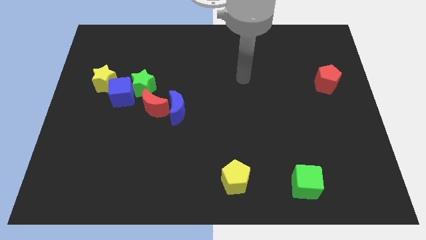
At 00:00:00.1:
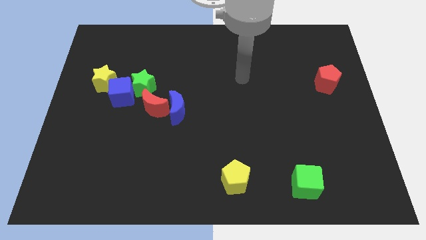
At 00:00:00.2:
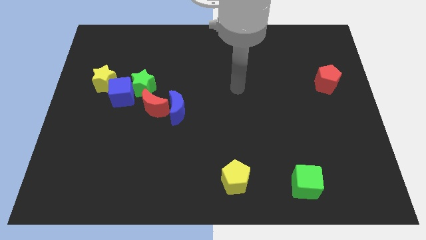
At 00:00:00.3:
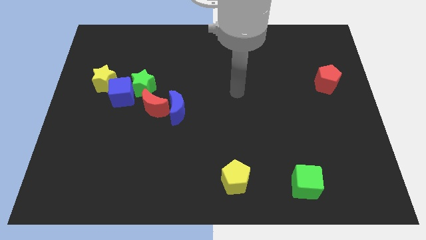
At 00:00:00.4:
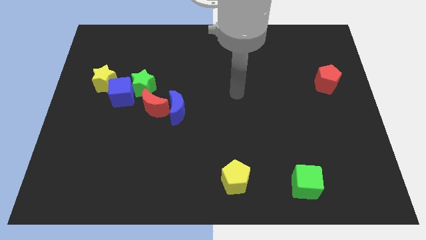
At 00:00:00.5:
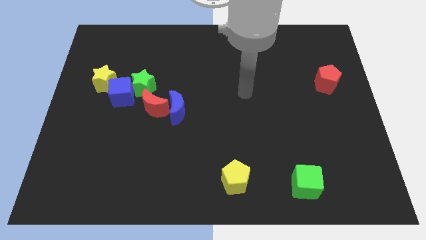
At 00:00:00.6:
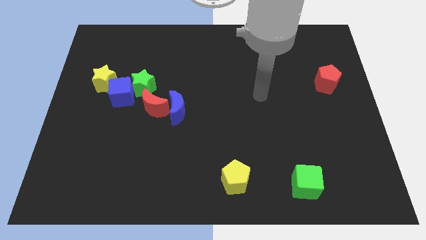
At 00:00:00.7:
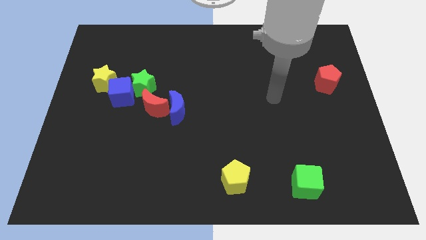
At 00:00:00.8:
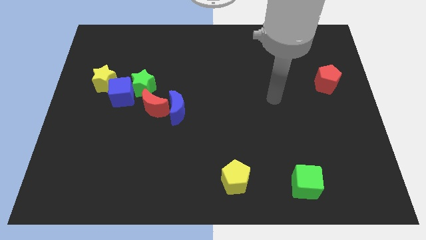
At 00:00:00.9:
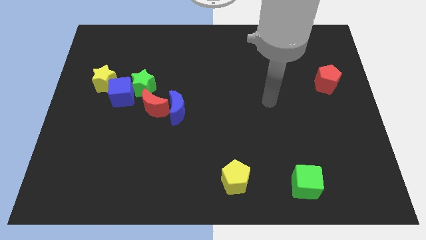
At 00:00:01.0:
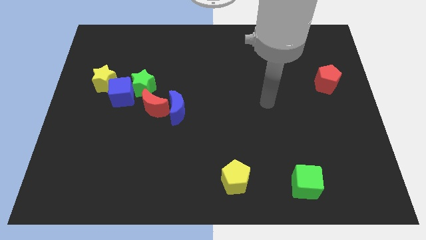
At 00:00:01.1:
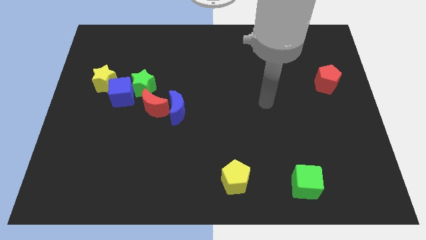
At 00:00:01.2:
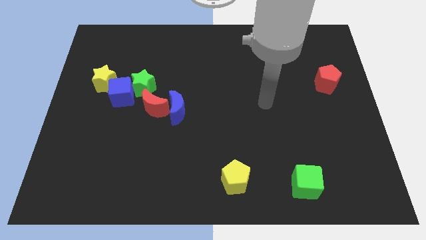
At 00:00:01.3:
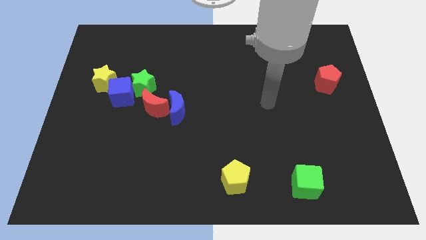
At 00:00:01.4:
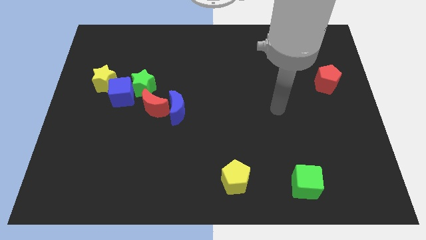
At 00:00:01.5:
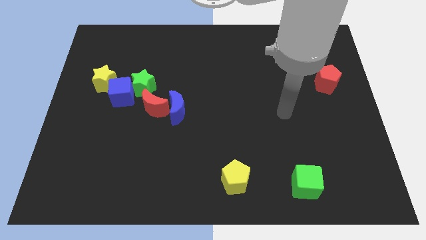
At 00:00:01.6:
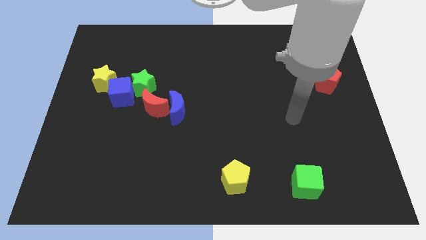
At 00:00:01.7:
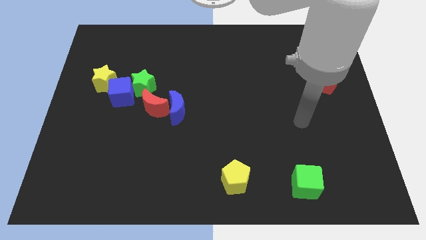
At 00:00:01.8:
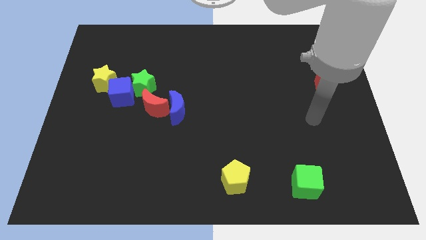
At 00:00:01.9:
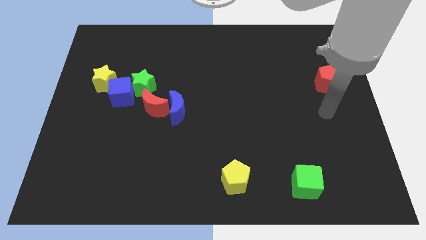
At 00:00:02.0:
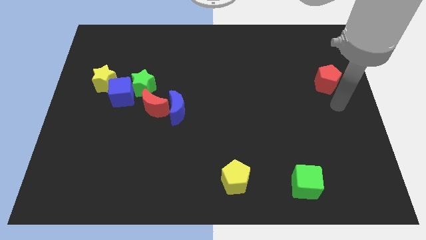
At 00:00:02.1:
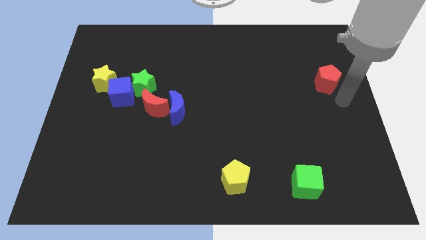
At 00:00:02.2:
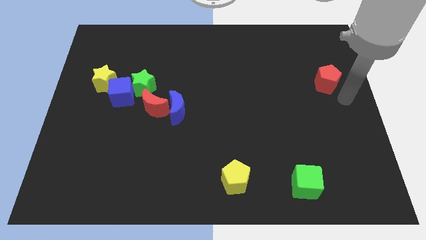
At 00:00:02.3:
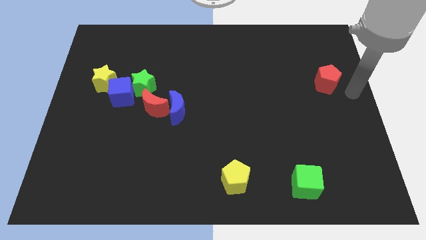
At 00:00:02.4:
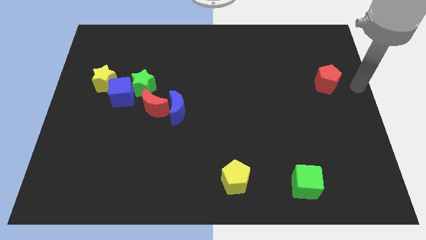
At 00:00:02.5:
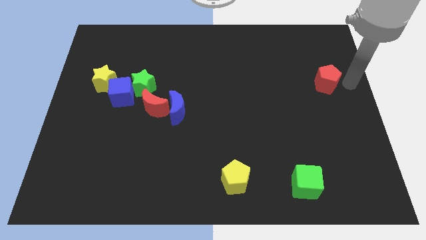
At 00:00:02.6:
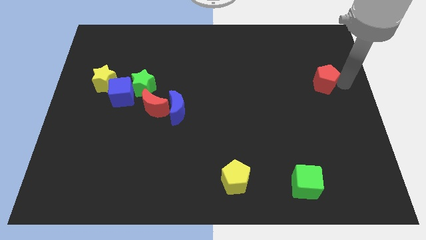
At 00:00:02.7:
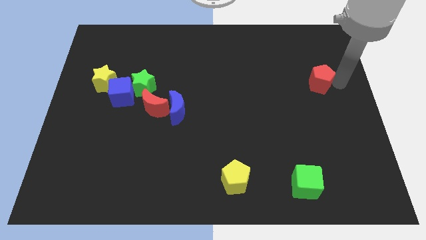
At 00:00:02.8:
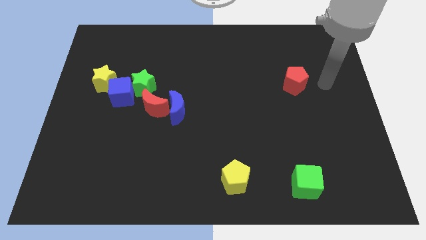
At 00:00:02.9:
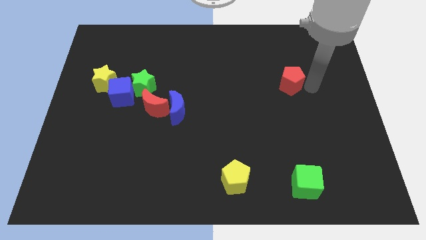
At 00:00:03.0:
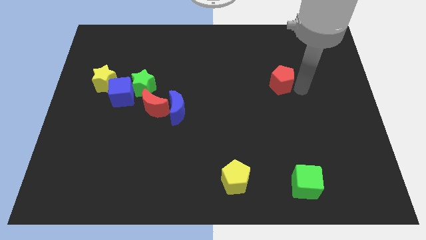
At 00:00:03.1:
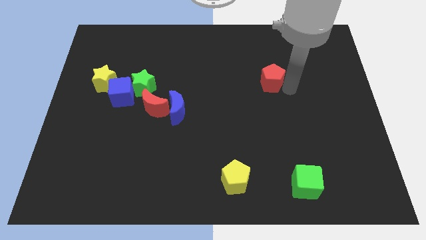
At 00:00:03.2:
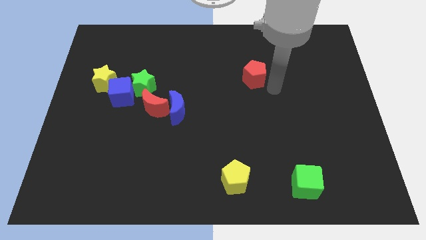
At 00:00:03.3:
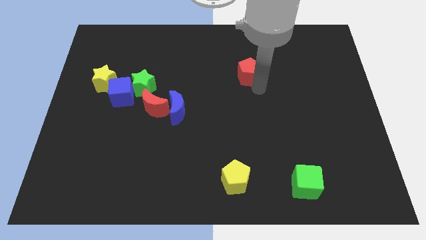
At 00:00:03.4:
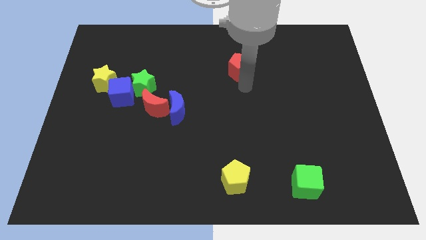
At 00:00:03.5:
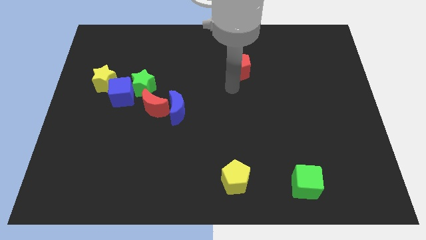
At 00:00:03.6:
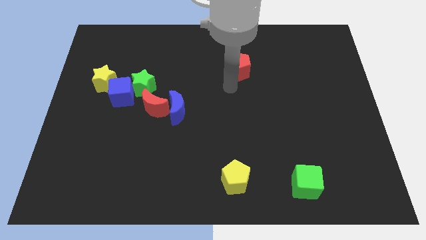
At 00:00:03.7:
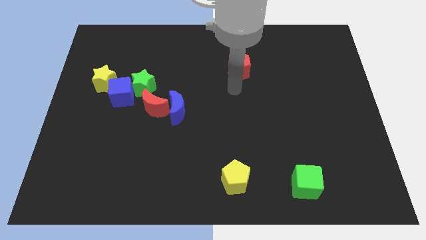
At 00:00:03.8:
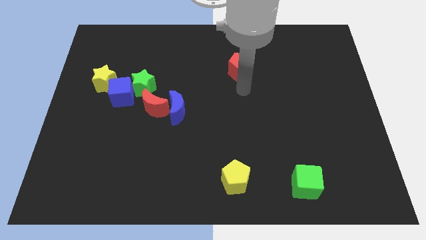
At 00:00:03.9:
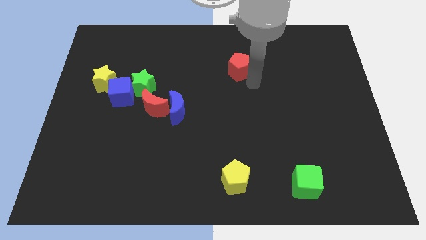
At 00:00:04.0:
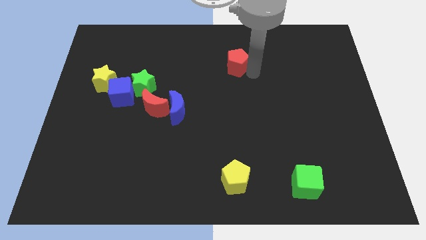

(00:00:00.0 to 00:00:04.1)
push red crescent towards the center of the board

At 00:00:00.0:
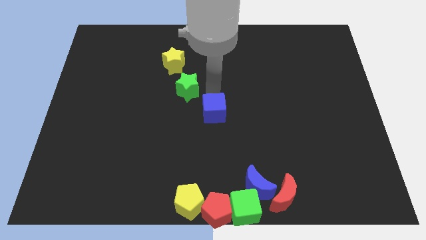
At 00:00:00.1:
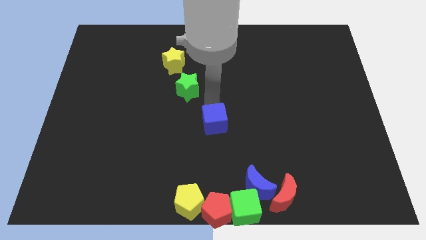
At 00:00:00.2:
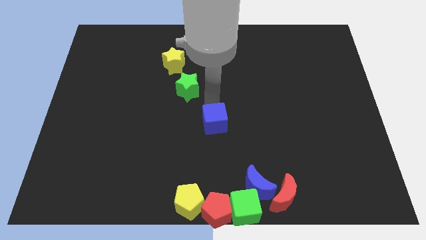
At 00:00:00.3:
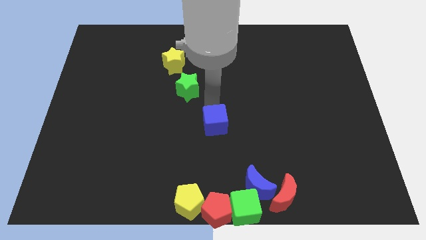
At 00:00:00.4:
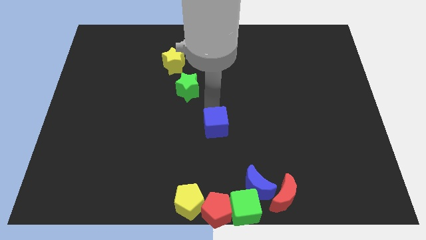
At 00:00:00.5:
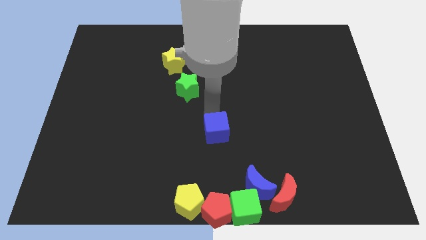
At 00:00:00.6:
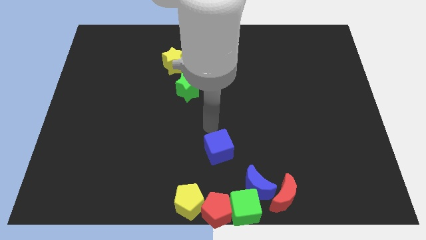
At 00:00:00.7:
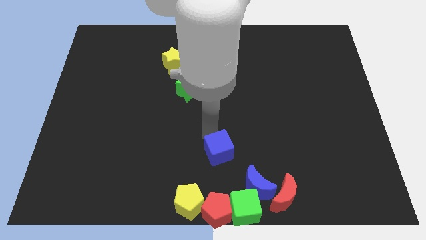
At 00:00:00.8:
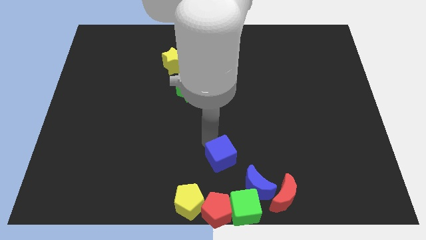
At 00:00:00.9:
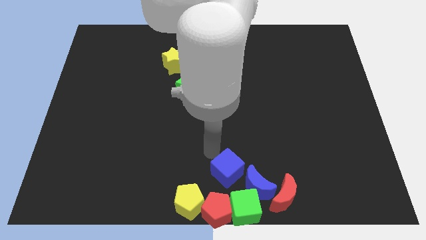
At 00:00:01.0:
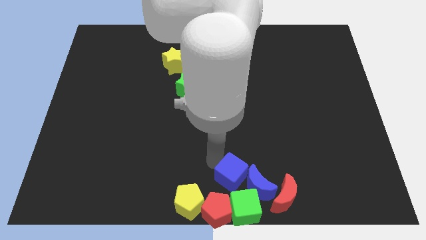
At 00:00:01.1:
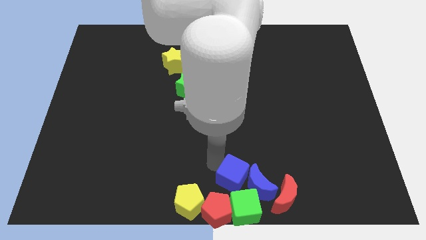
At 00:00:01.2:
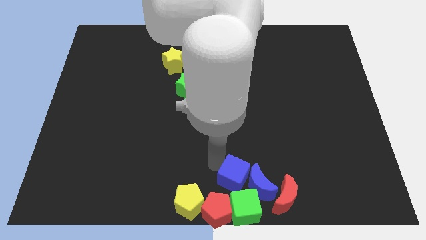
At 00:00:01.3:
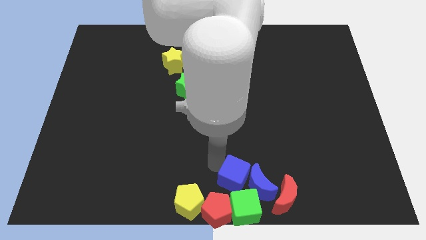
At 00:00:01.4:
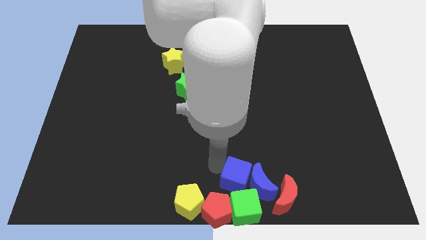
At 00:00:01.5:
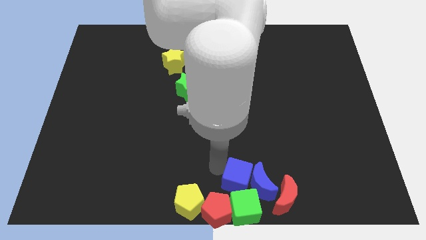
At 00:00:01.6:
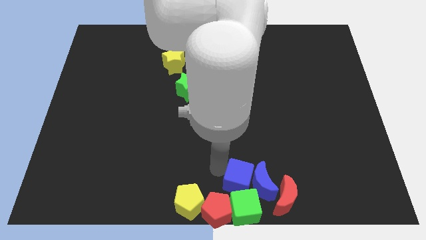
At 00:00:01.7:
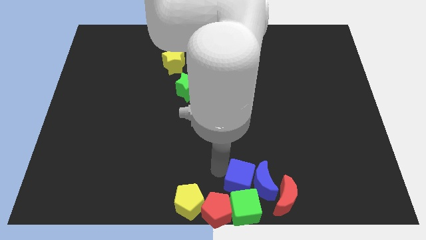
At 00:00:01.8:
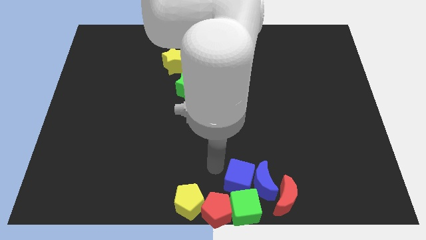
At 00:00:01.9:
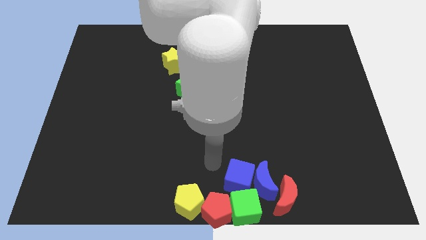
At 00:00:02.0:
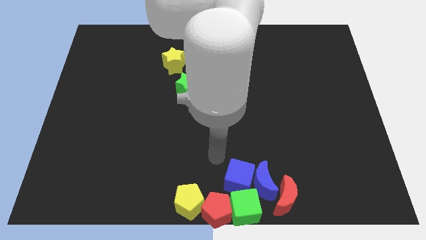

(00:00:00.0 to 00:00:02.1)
push the blue cube into the group of blocks

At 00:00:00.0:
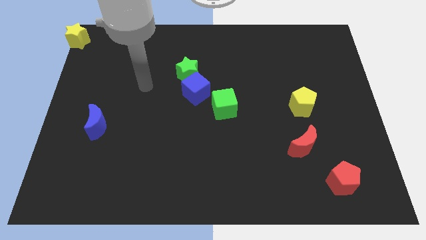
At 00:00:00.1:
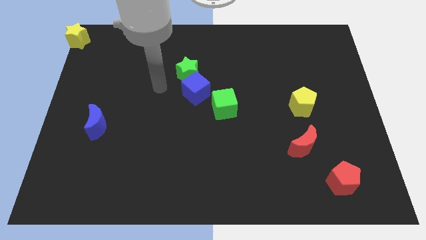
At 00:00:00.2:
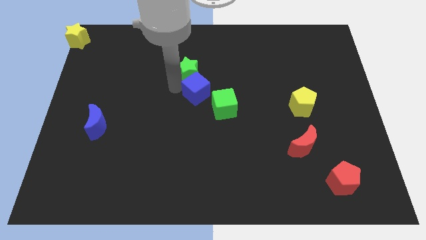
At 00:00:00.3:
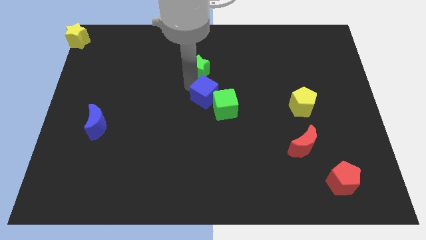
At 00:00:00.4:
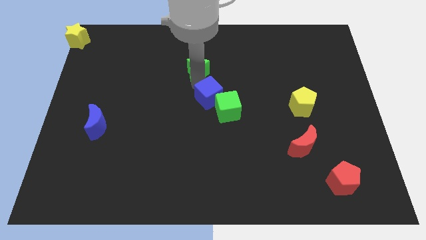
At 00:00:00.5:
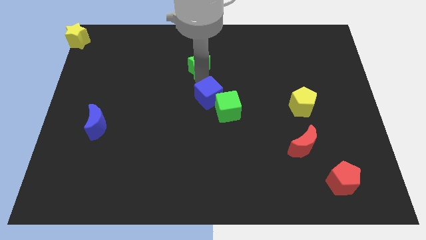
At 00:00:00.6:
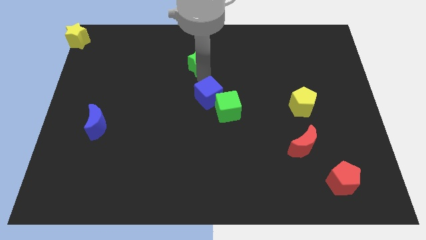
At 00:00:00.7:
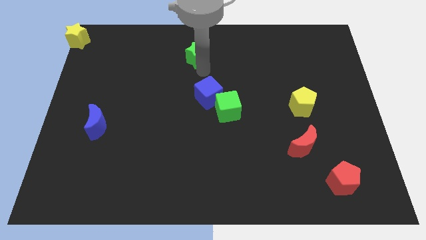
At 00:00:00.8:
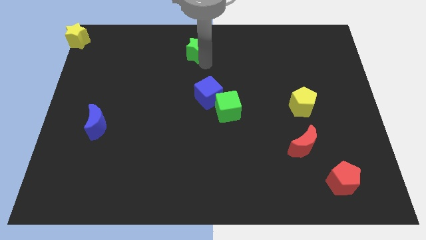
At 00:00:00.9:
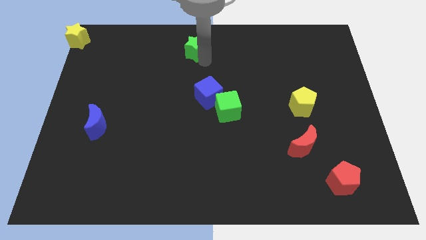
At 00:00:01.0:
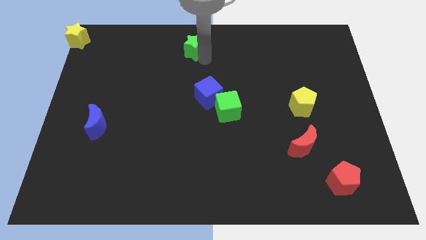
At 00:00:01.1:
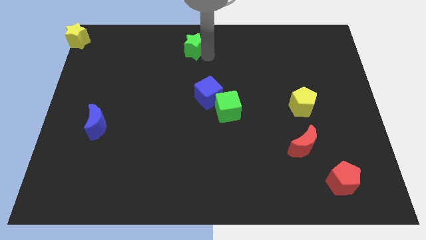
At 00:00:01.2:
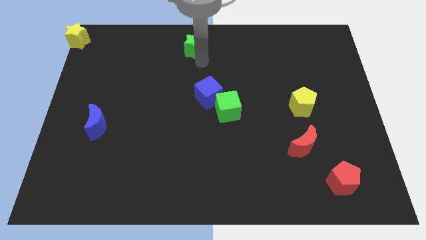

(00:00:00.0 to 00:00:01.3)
separate the yellow star from the blue cube

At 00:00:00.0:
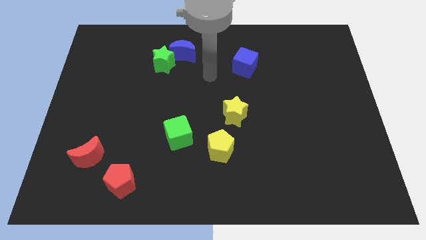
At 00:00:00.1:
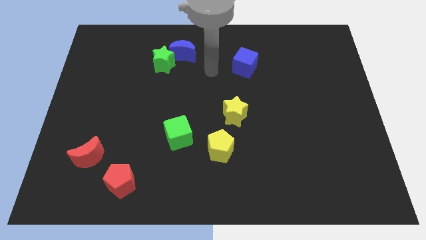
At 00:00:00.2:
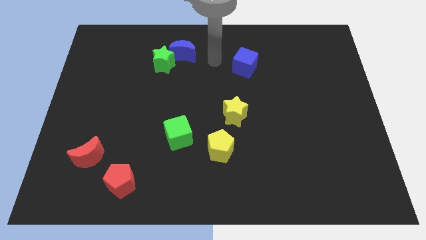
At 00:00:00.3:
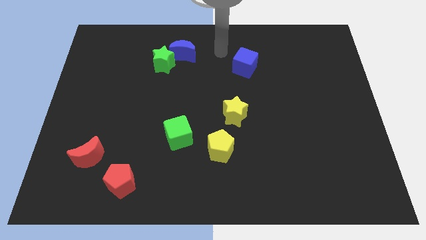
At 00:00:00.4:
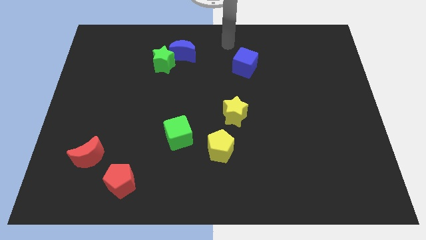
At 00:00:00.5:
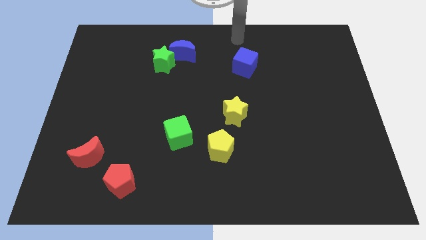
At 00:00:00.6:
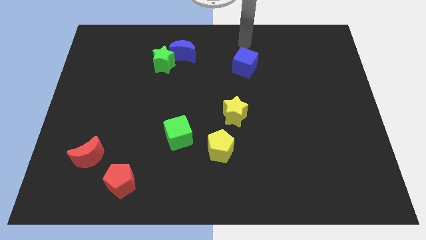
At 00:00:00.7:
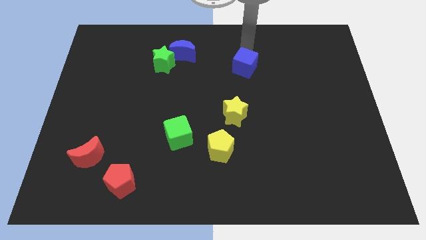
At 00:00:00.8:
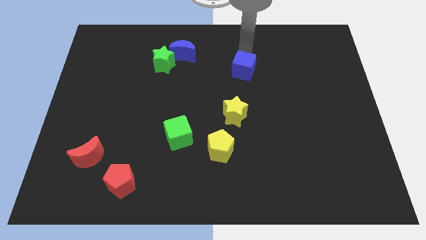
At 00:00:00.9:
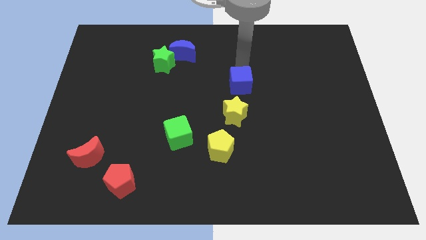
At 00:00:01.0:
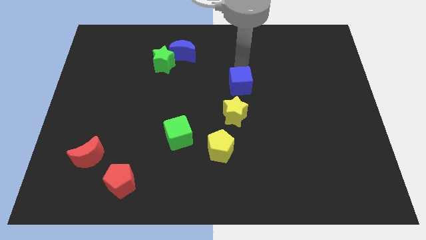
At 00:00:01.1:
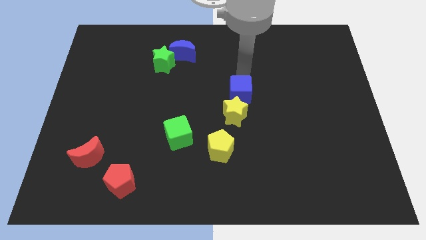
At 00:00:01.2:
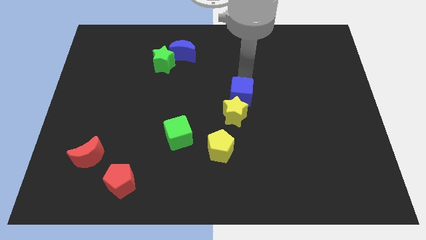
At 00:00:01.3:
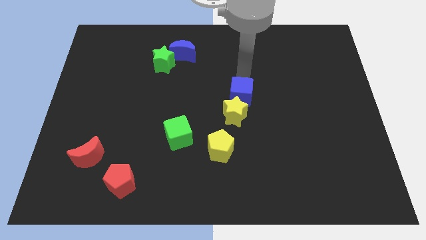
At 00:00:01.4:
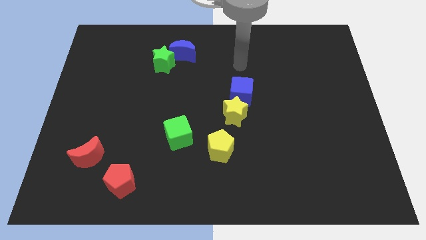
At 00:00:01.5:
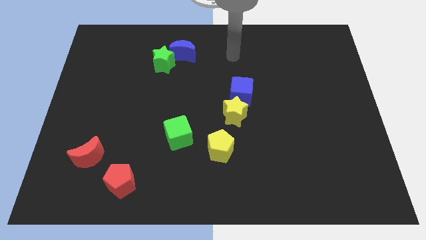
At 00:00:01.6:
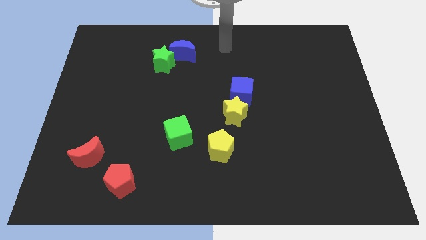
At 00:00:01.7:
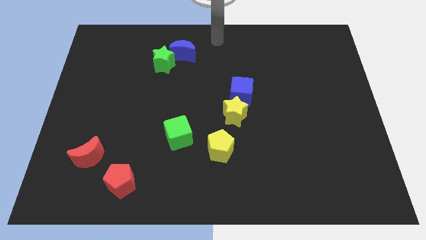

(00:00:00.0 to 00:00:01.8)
move the blue cube above the yellow star
